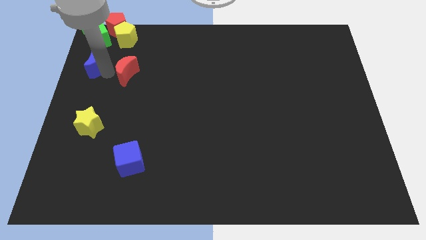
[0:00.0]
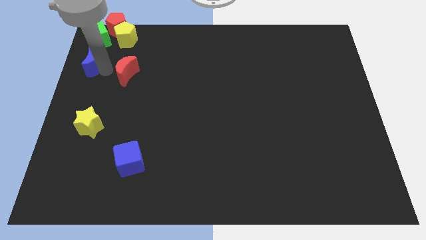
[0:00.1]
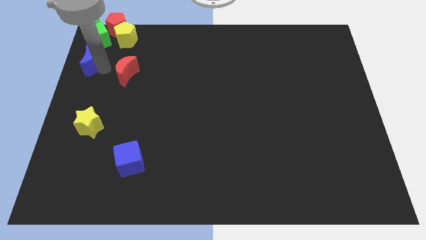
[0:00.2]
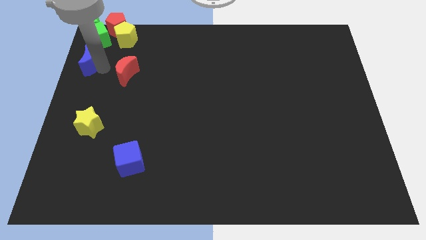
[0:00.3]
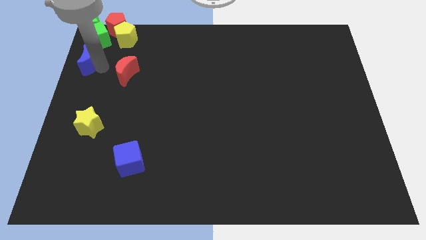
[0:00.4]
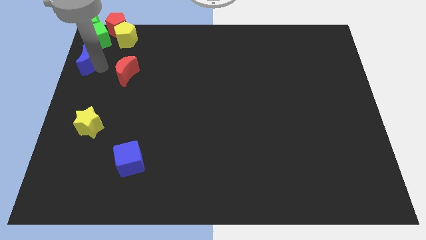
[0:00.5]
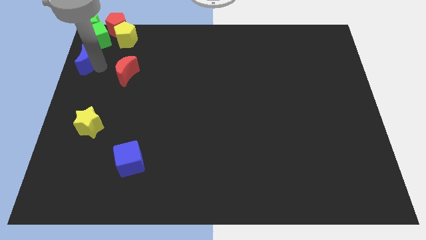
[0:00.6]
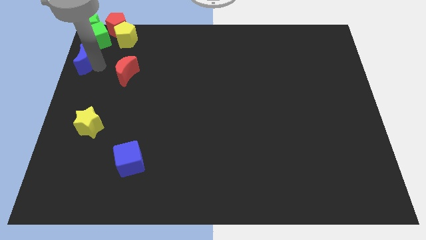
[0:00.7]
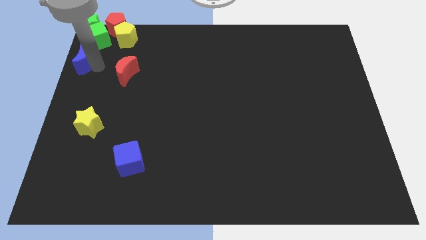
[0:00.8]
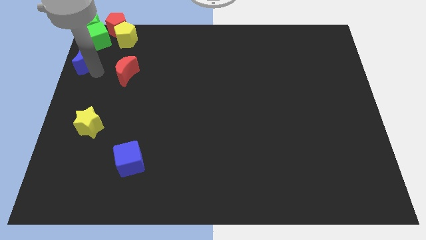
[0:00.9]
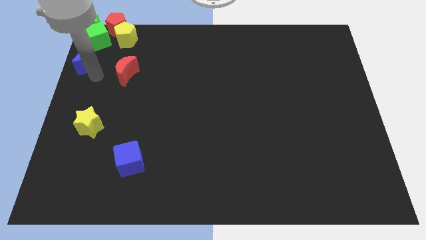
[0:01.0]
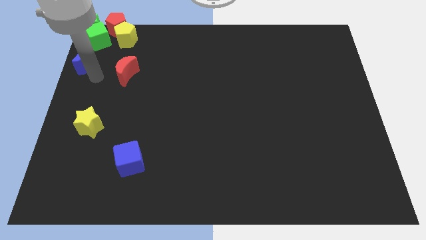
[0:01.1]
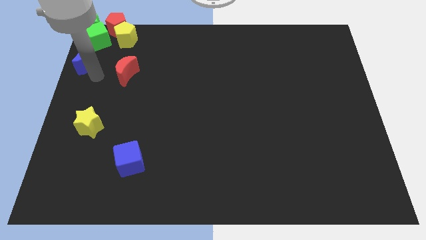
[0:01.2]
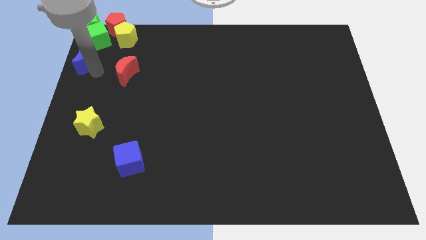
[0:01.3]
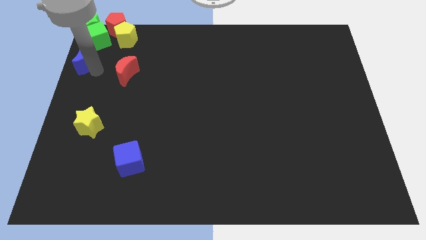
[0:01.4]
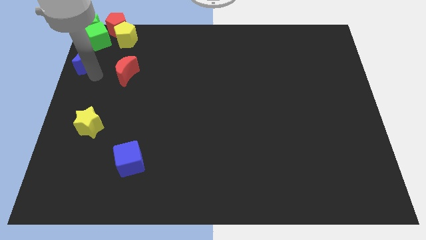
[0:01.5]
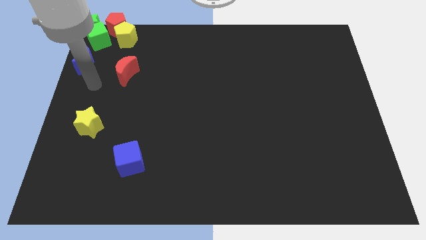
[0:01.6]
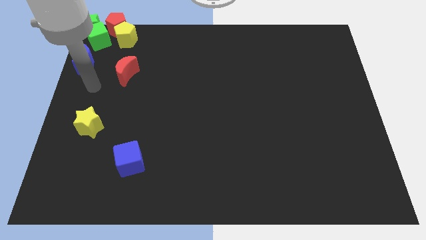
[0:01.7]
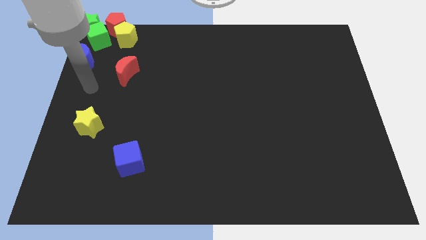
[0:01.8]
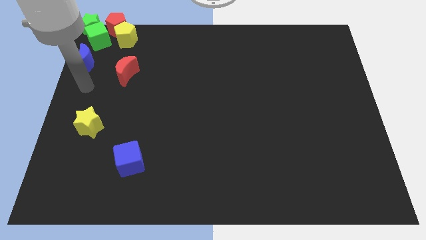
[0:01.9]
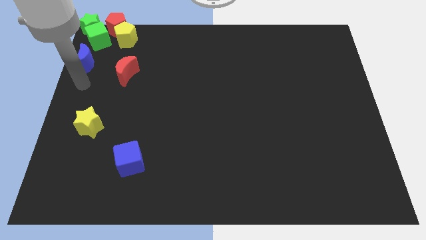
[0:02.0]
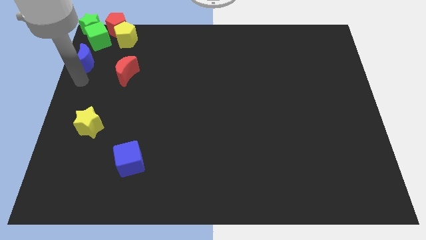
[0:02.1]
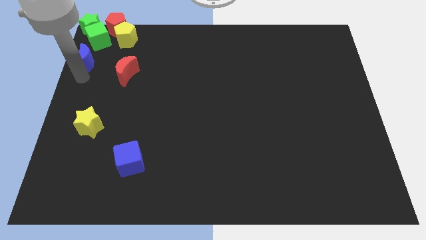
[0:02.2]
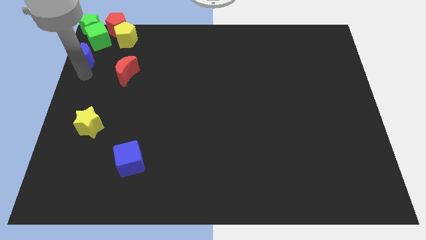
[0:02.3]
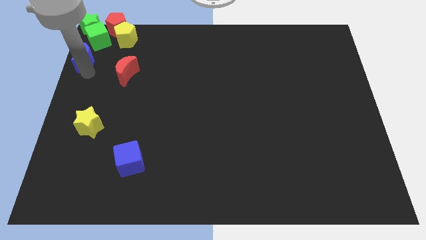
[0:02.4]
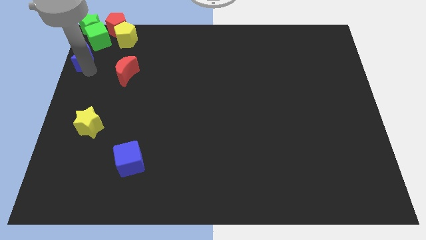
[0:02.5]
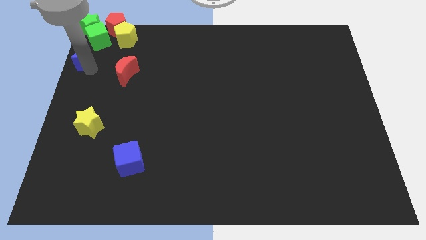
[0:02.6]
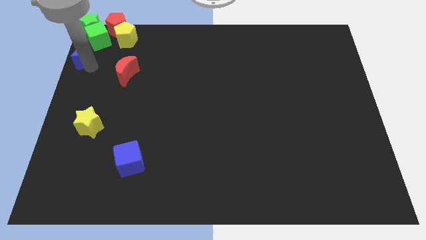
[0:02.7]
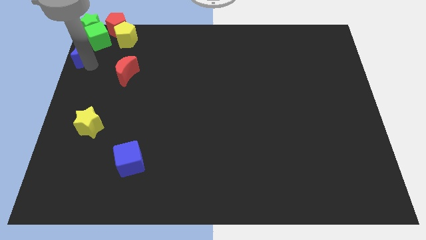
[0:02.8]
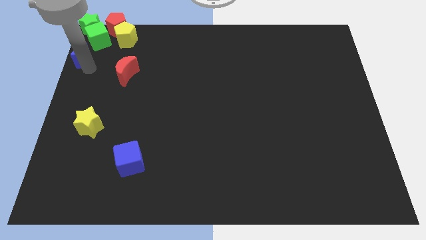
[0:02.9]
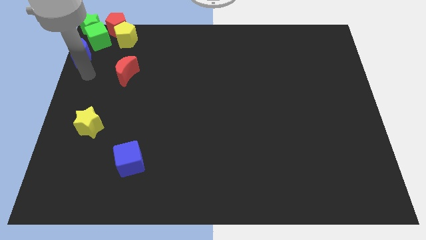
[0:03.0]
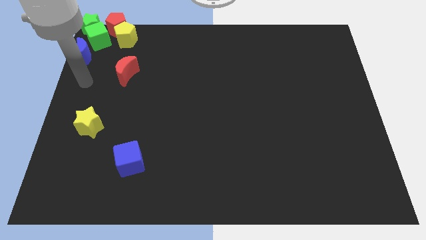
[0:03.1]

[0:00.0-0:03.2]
put the blue moon diagonally to the green cube

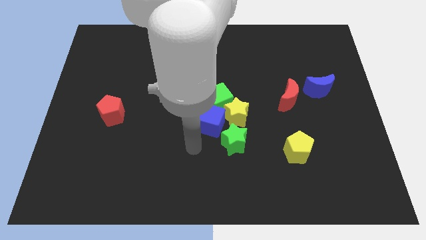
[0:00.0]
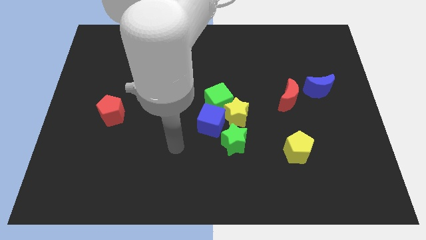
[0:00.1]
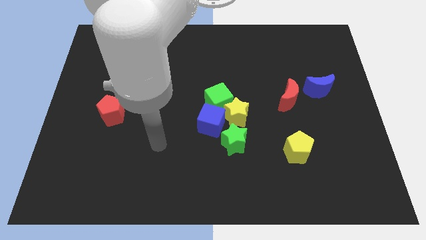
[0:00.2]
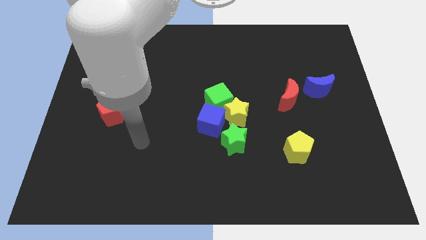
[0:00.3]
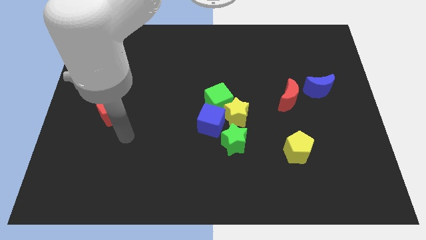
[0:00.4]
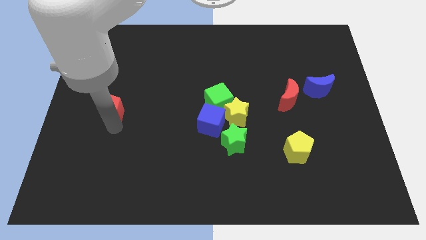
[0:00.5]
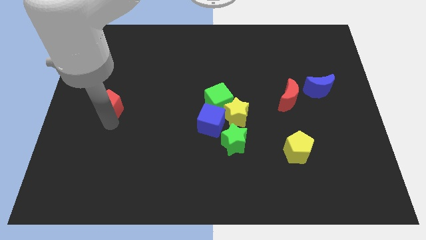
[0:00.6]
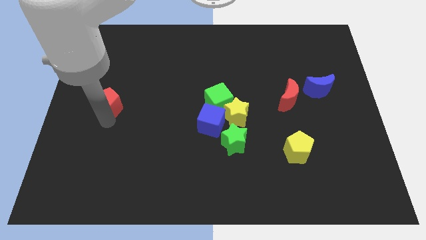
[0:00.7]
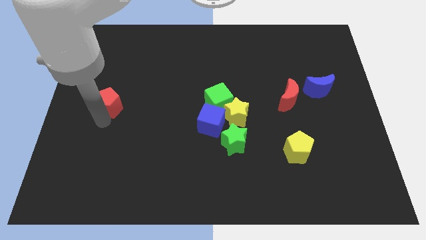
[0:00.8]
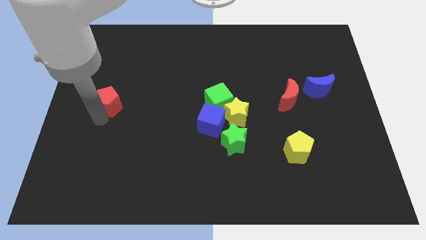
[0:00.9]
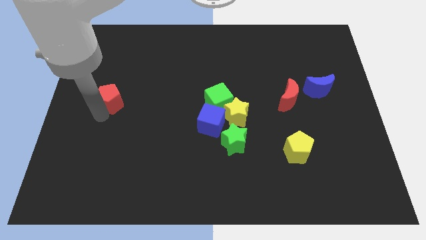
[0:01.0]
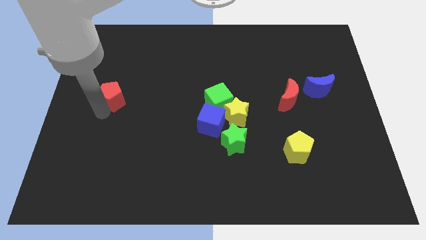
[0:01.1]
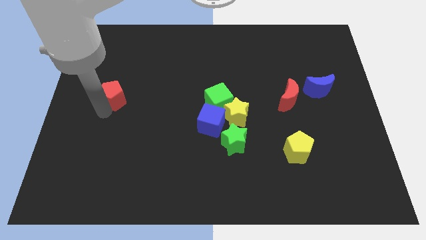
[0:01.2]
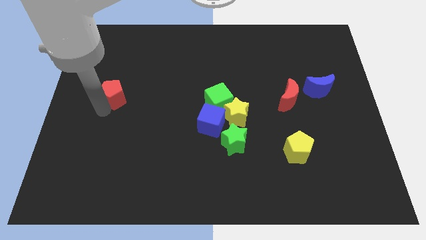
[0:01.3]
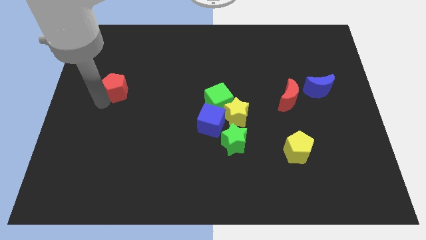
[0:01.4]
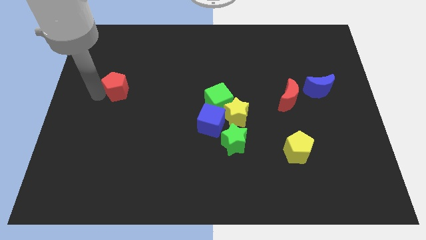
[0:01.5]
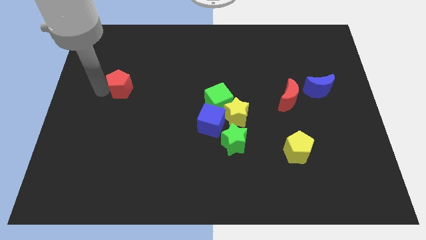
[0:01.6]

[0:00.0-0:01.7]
drag red pentagon towards the top side of the board

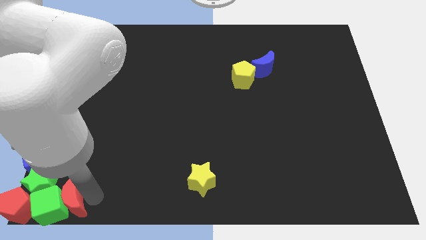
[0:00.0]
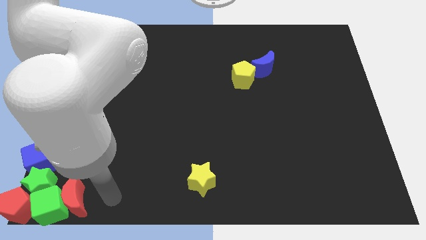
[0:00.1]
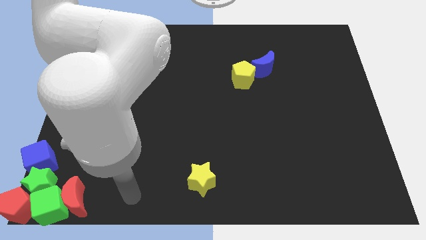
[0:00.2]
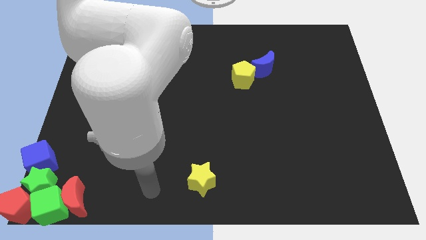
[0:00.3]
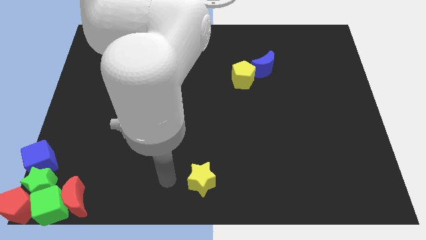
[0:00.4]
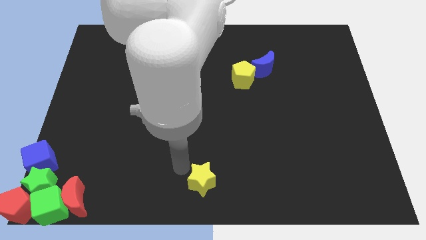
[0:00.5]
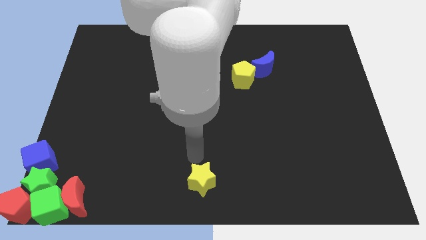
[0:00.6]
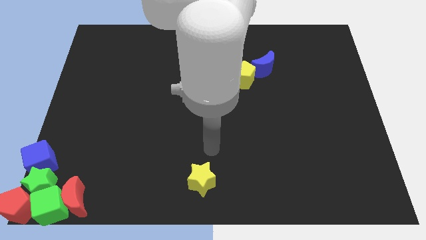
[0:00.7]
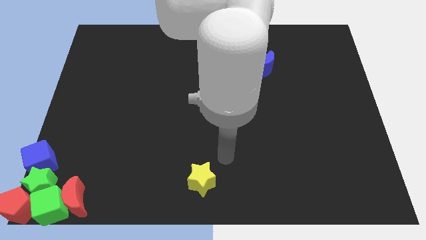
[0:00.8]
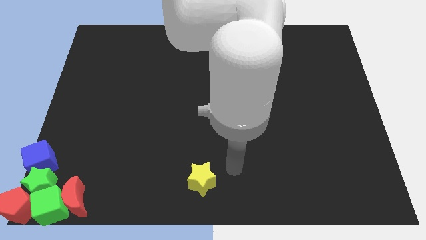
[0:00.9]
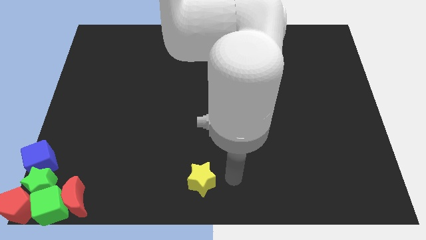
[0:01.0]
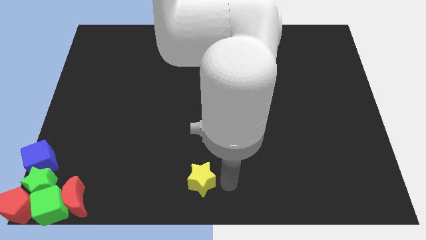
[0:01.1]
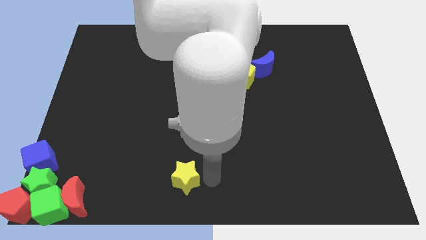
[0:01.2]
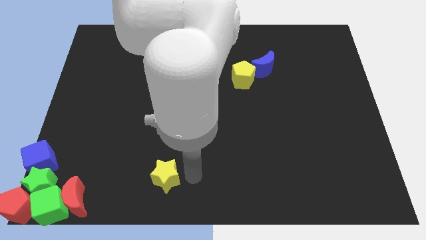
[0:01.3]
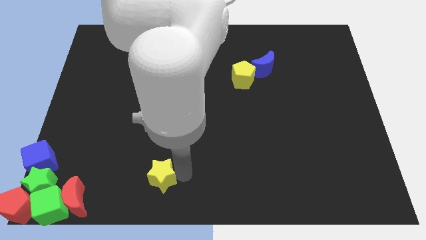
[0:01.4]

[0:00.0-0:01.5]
move the yellow star slightly to the left

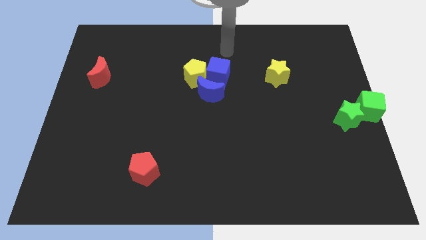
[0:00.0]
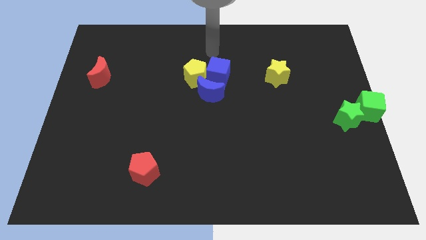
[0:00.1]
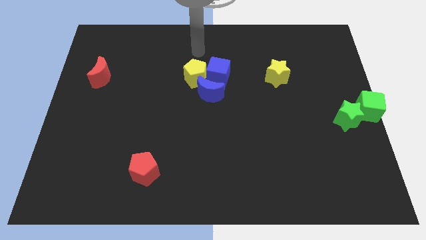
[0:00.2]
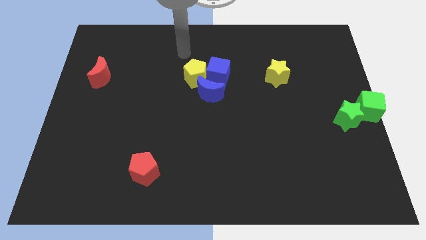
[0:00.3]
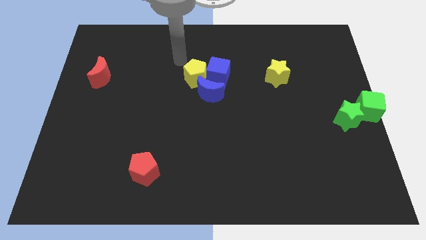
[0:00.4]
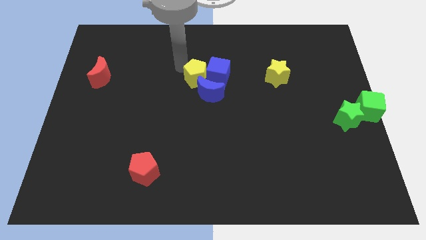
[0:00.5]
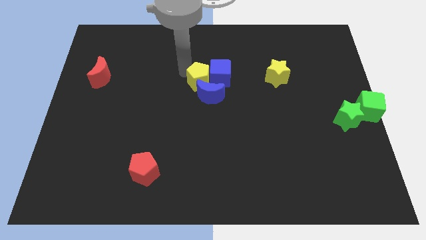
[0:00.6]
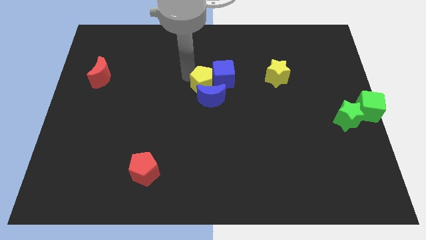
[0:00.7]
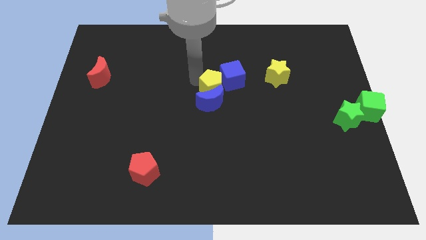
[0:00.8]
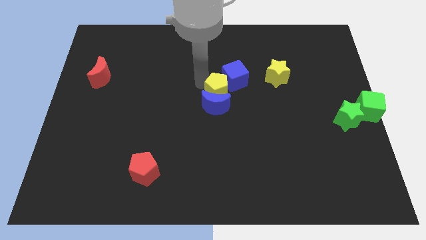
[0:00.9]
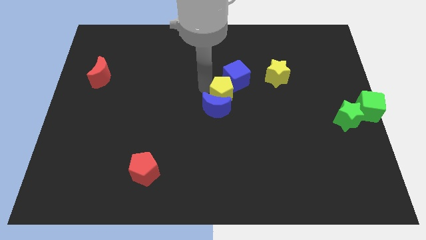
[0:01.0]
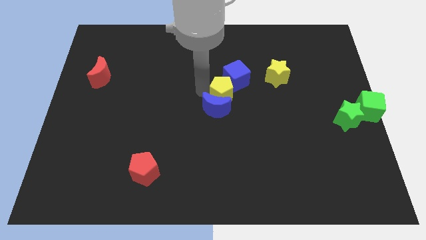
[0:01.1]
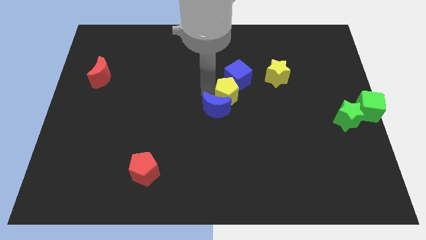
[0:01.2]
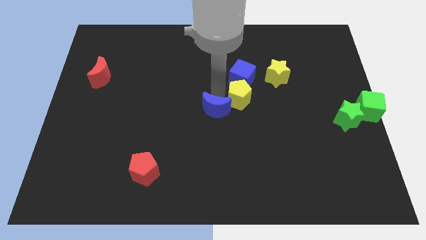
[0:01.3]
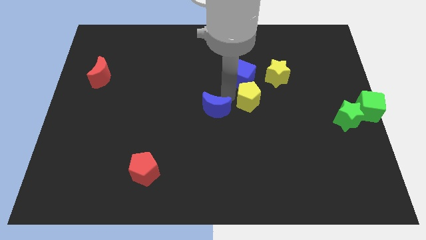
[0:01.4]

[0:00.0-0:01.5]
push the yellow pentagon to the bottom side of the blue cube

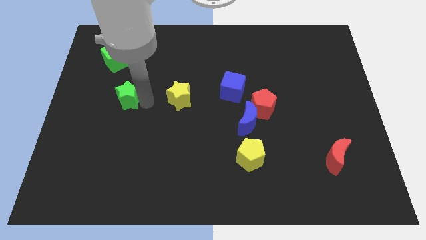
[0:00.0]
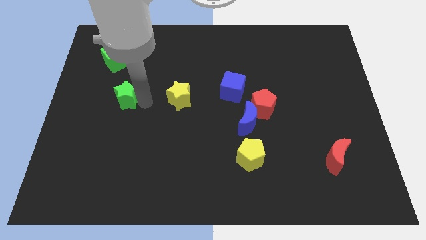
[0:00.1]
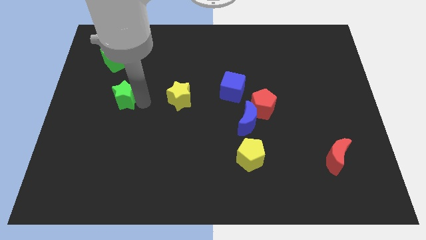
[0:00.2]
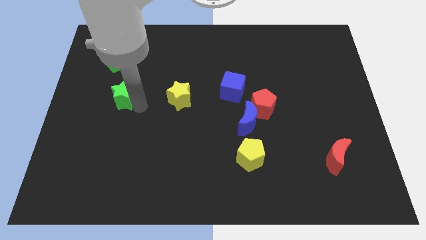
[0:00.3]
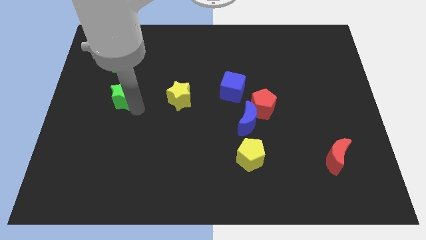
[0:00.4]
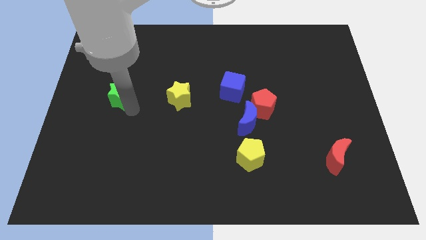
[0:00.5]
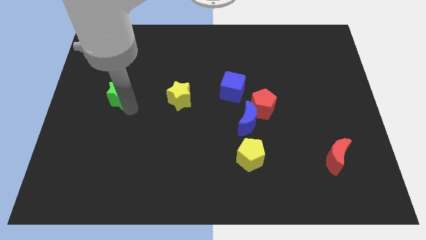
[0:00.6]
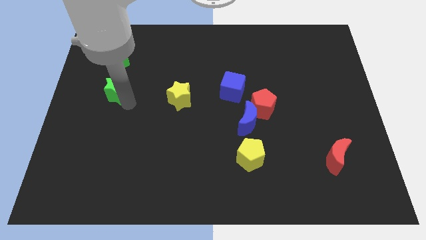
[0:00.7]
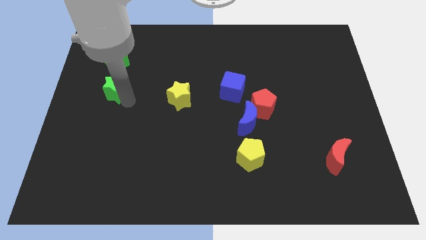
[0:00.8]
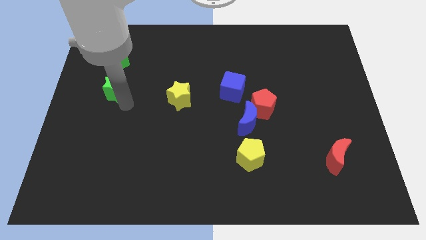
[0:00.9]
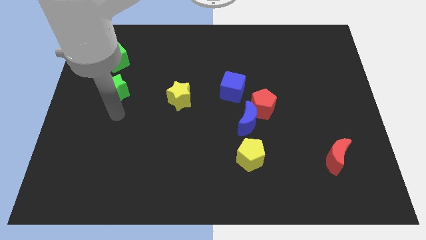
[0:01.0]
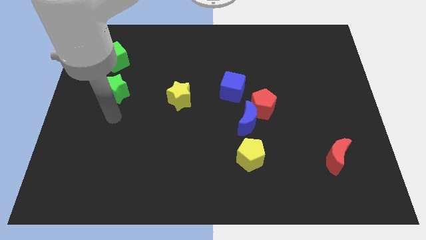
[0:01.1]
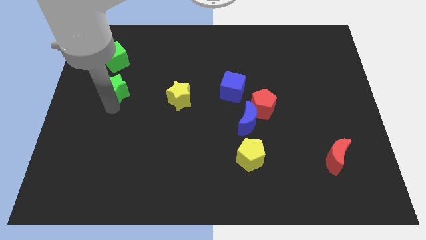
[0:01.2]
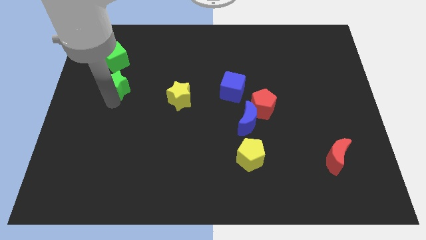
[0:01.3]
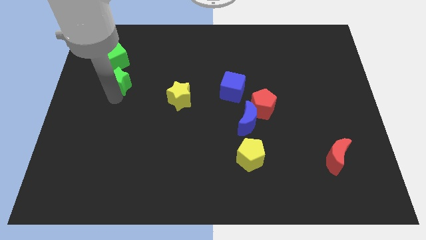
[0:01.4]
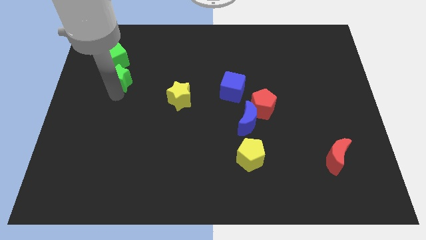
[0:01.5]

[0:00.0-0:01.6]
place the green star below the green cube
